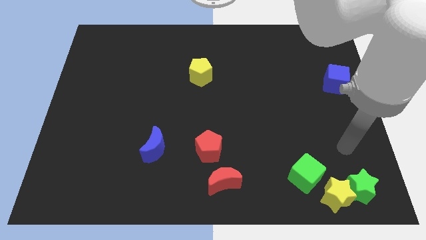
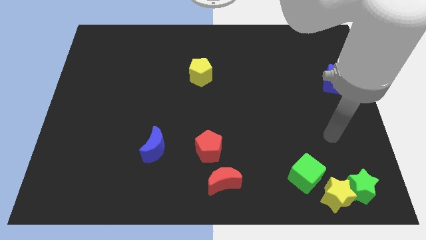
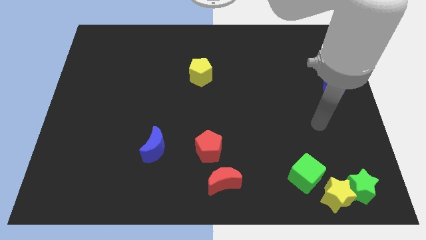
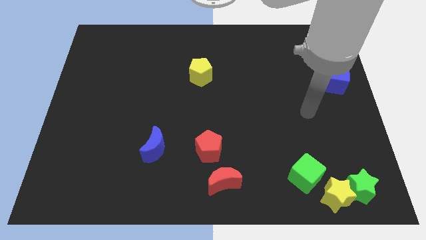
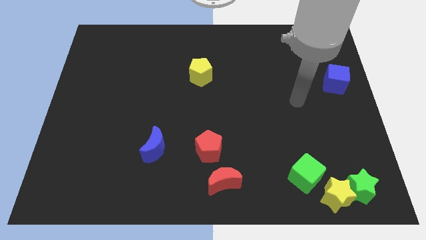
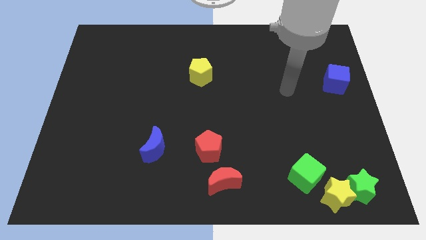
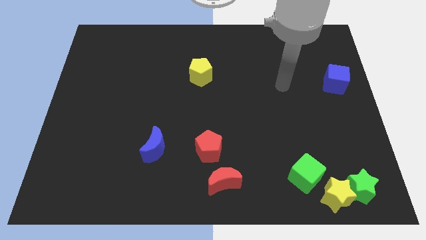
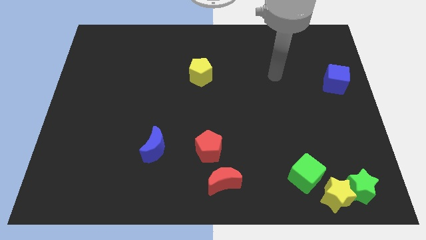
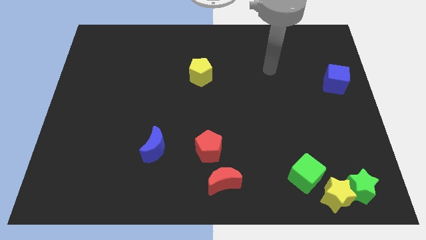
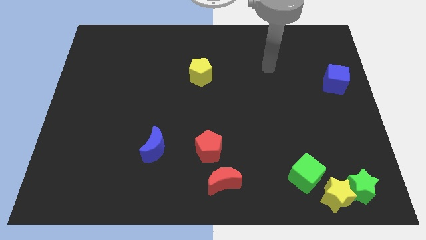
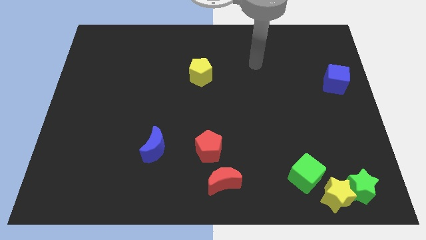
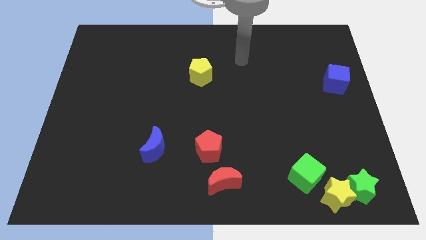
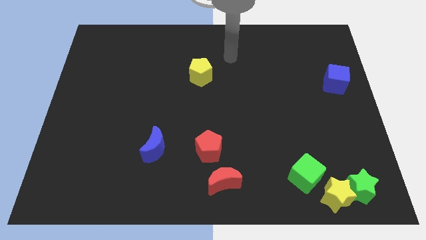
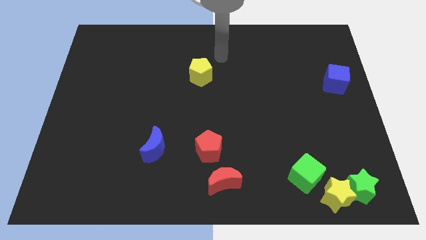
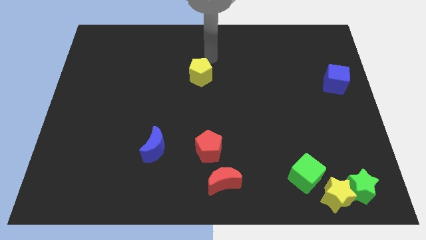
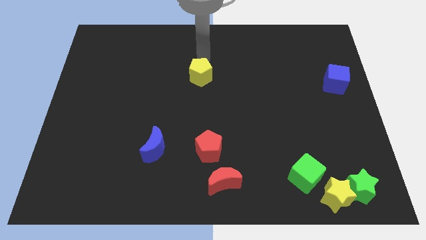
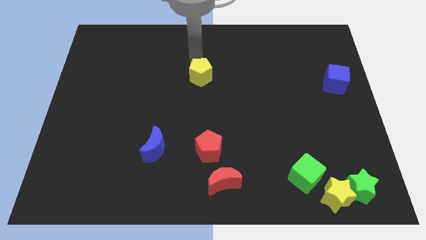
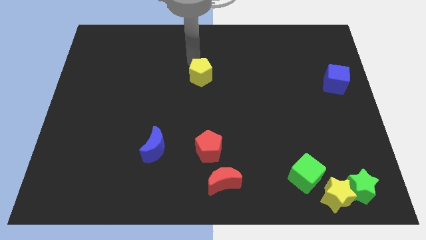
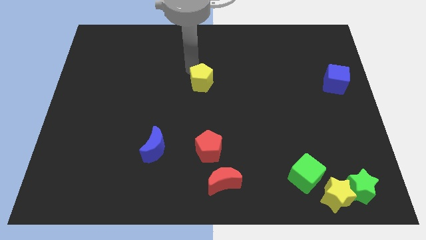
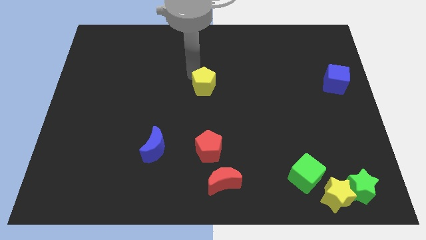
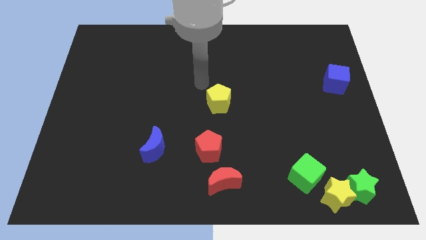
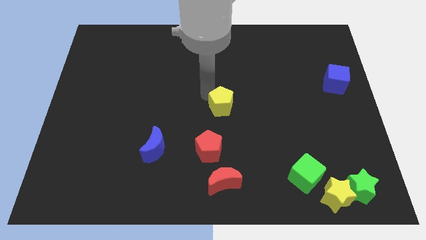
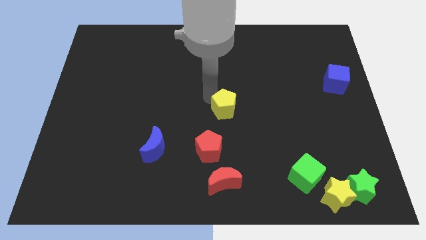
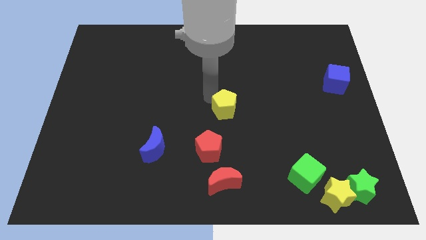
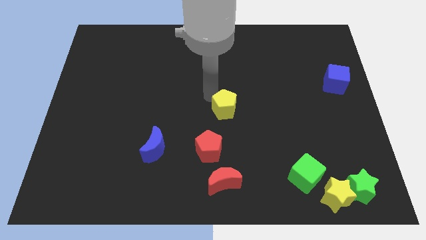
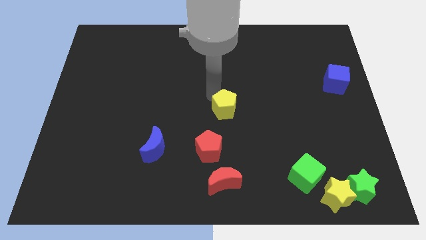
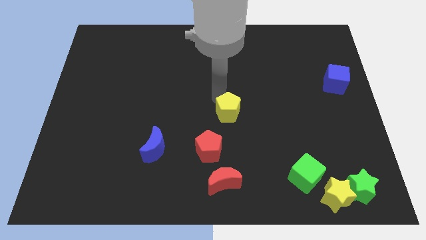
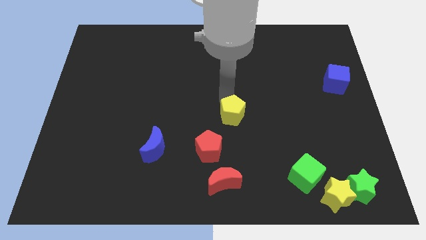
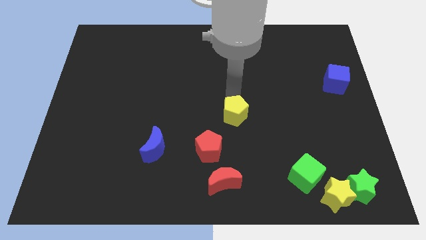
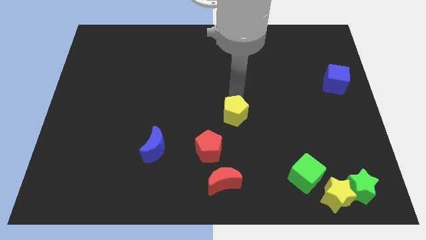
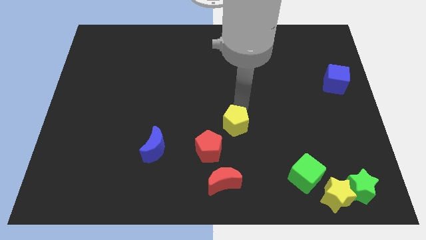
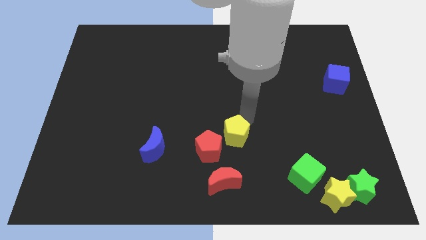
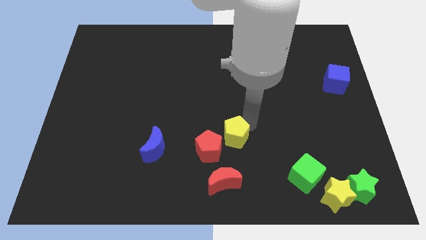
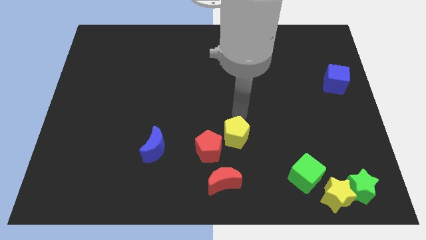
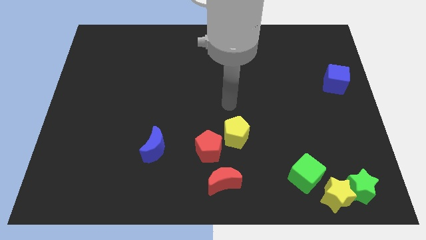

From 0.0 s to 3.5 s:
move the yellow pentagon diagonal to the red pentagon

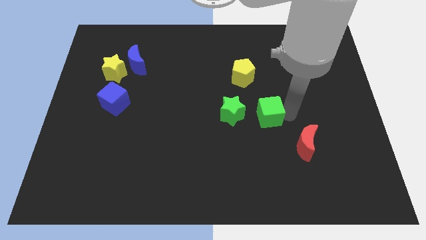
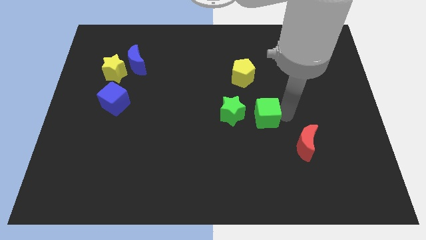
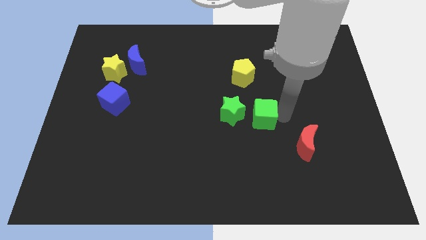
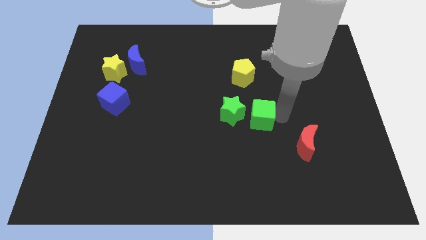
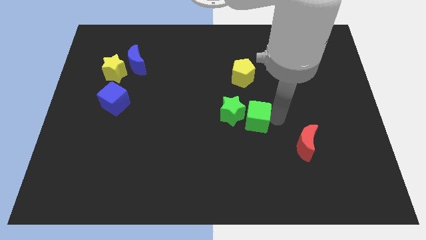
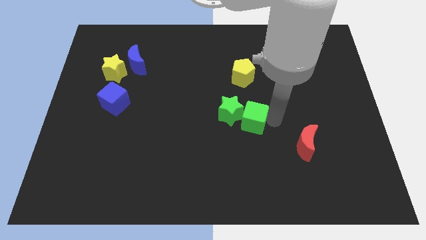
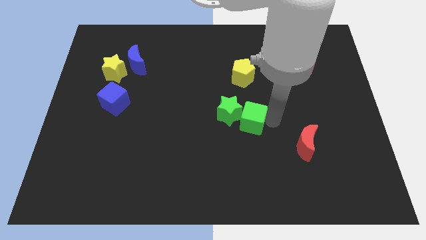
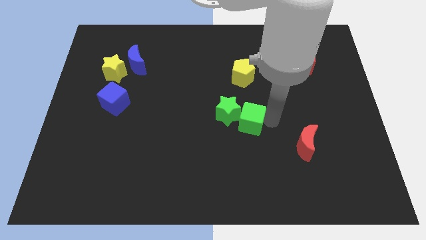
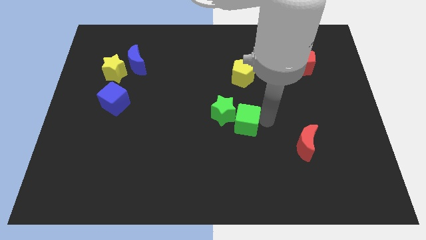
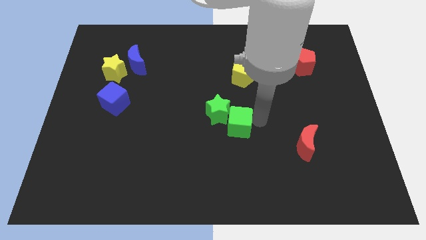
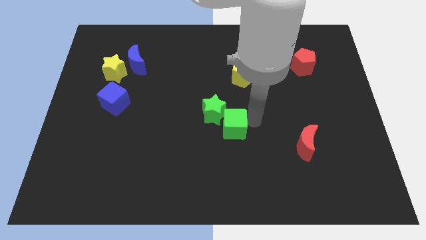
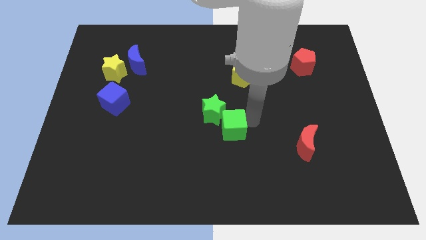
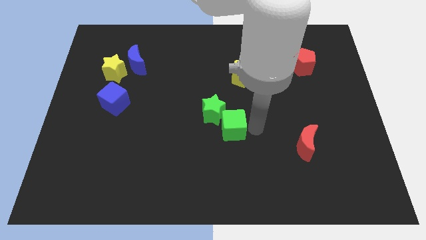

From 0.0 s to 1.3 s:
push the green cube into the right side of the green star

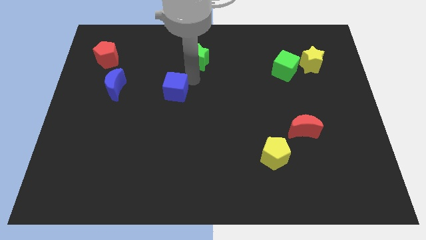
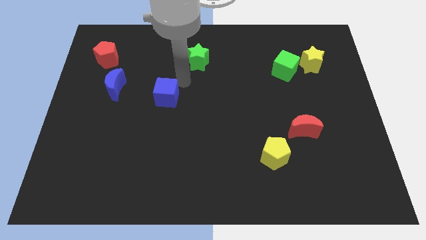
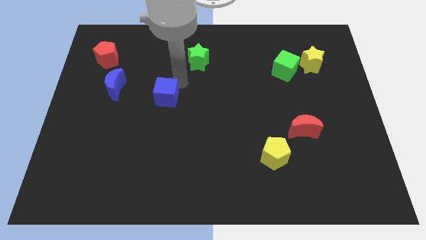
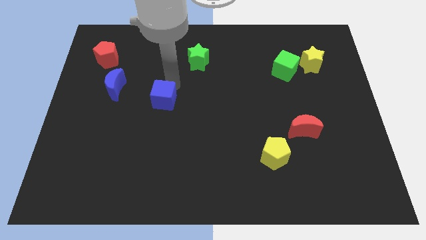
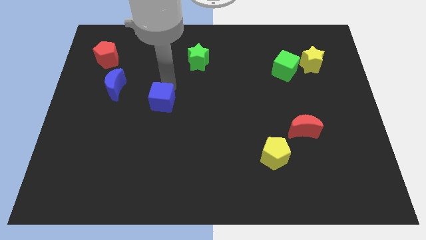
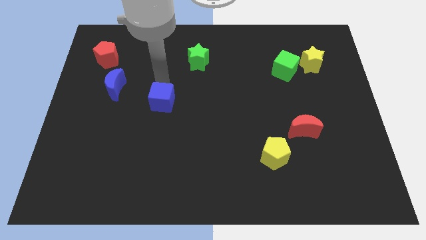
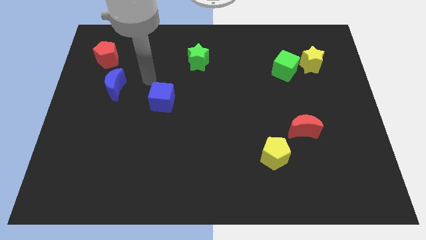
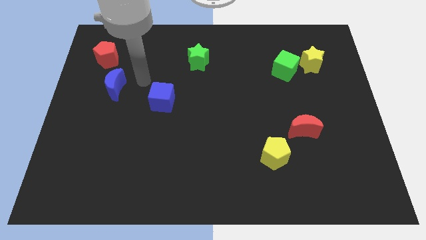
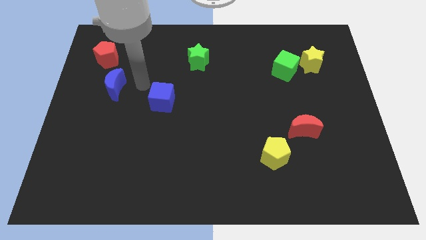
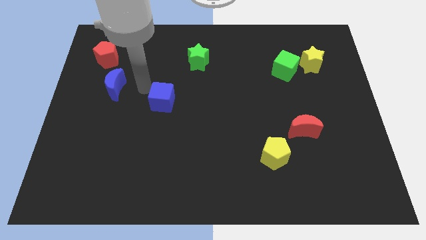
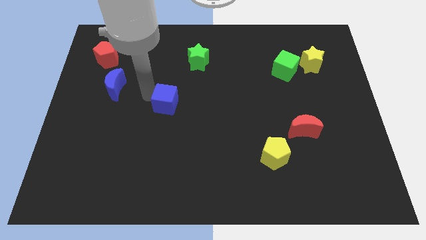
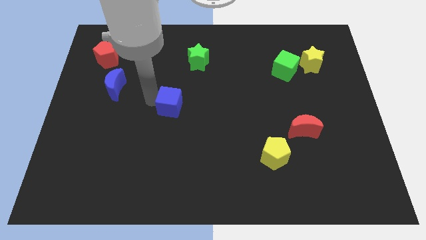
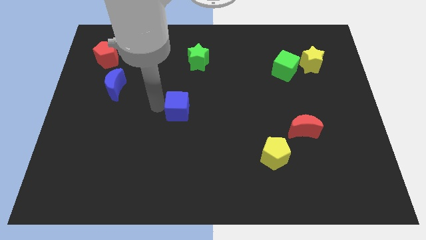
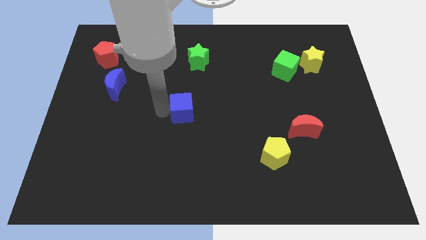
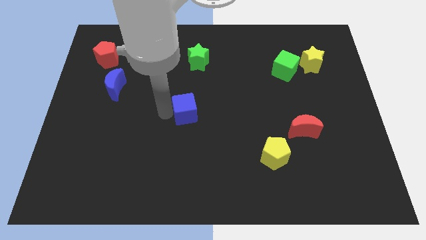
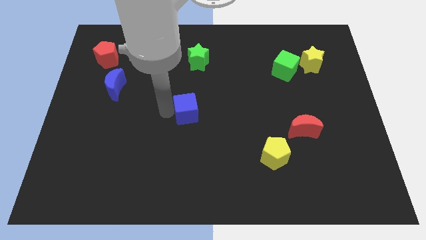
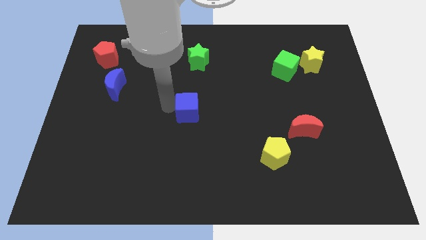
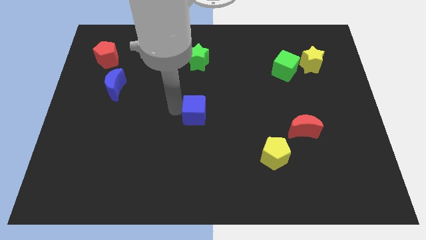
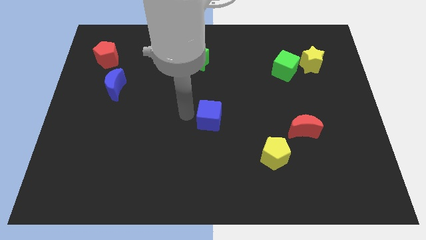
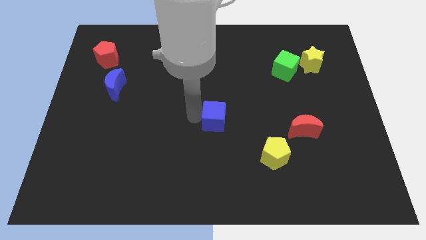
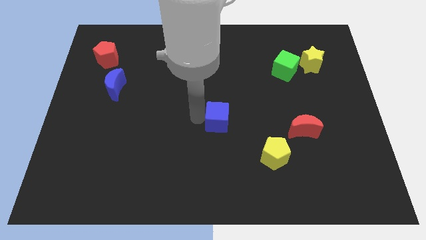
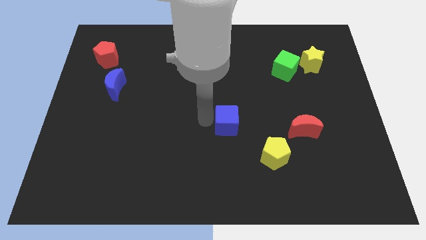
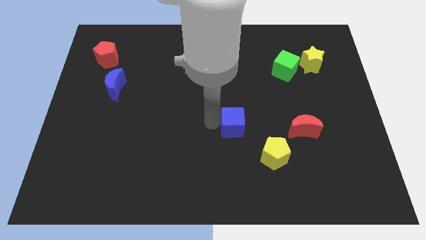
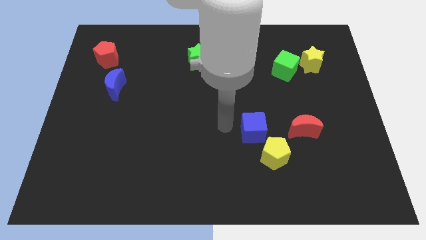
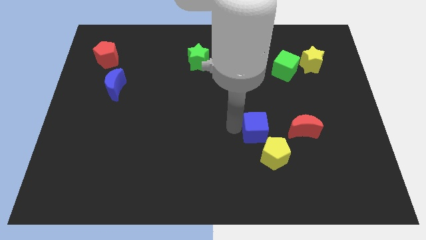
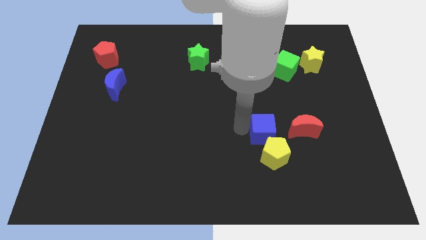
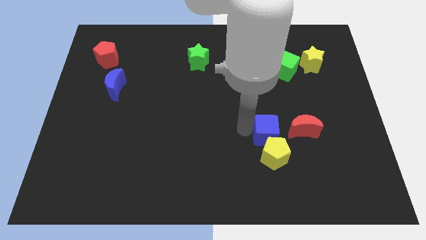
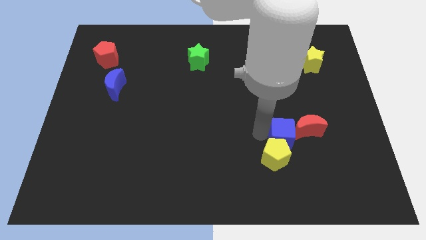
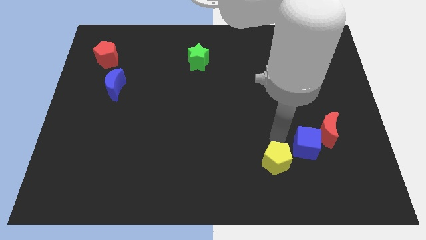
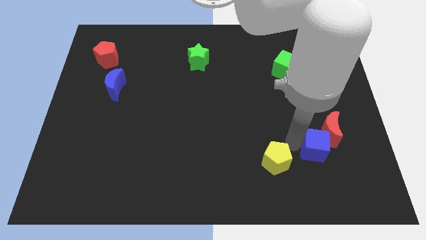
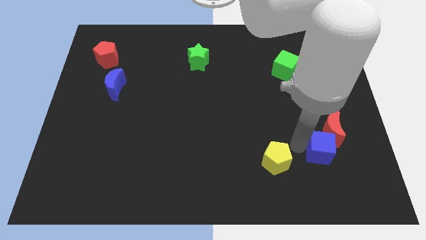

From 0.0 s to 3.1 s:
push blue cube diagonally right above yellow pentagon

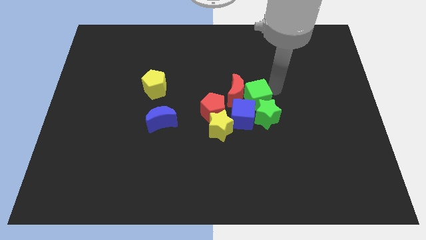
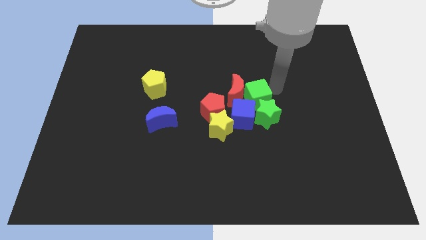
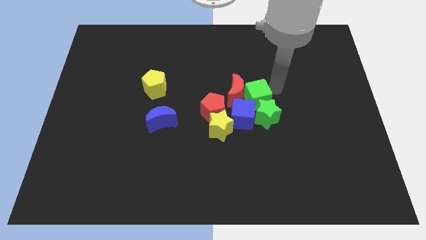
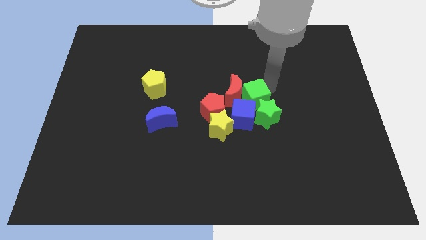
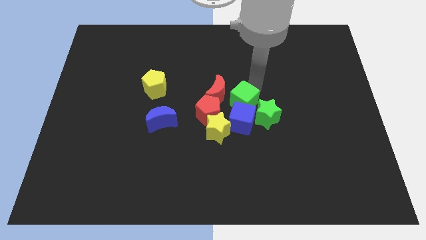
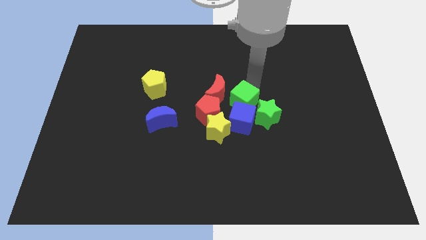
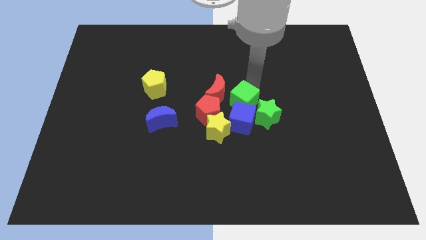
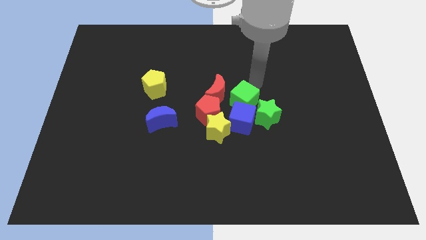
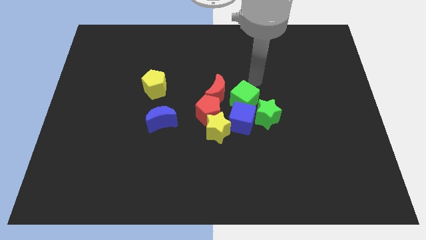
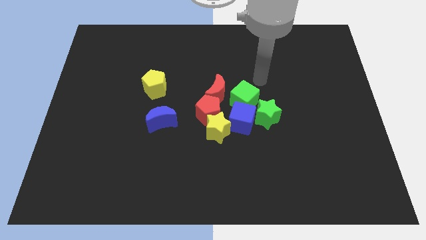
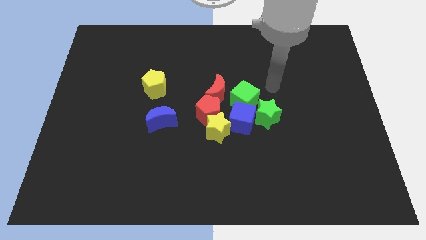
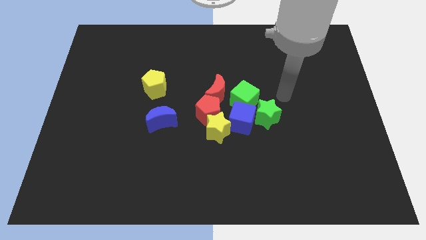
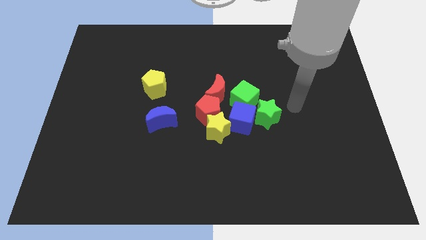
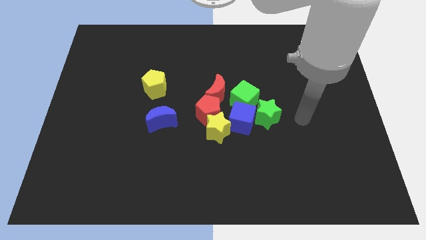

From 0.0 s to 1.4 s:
point your arm to the right of the green star
